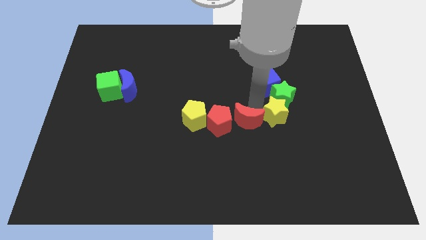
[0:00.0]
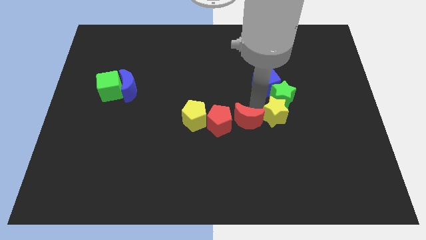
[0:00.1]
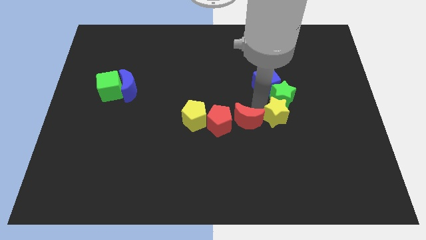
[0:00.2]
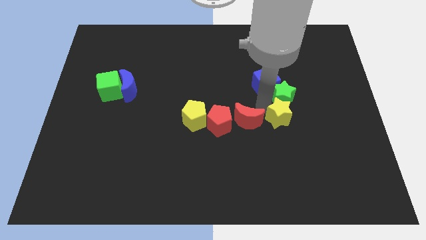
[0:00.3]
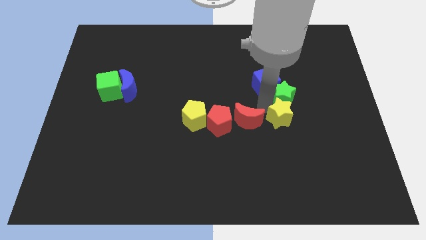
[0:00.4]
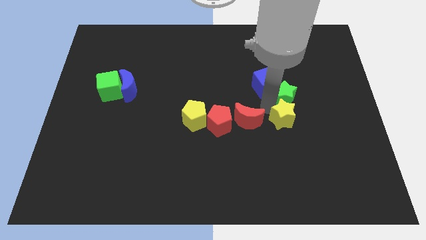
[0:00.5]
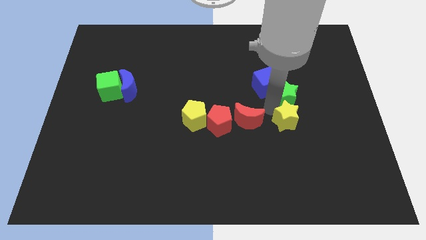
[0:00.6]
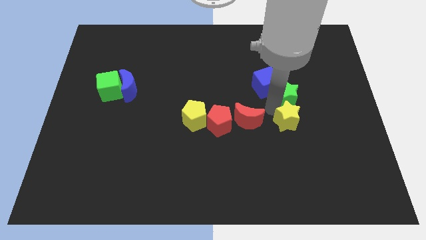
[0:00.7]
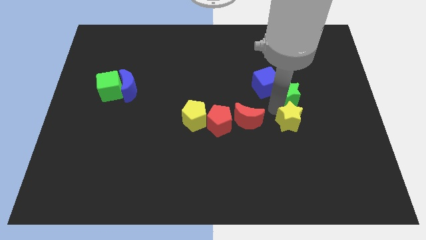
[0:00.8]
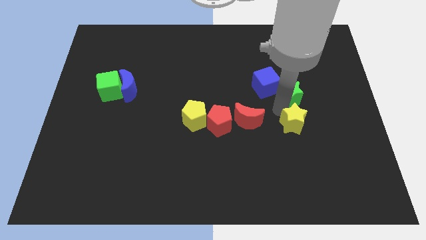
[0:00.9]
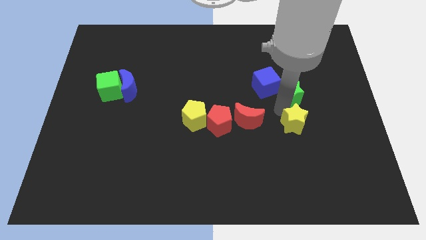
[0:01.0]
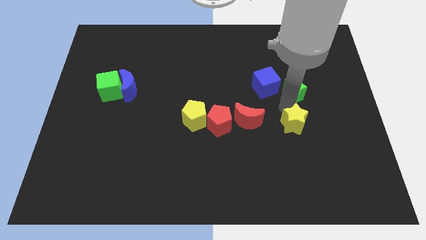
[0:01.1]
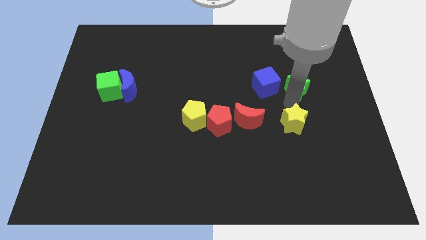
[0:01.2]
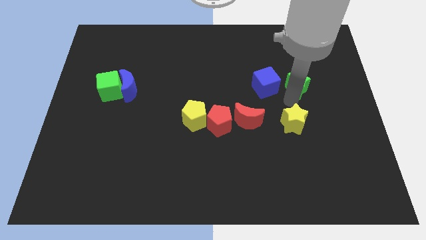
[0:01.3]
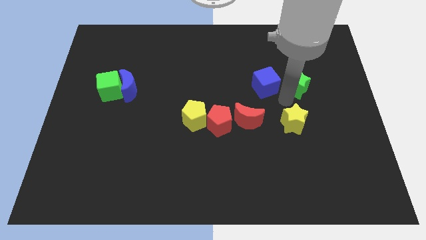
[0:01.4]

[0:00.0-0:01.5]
separate the green and yellow stars

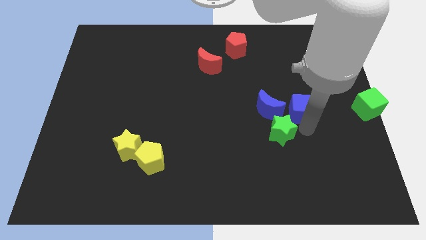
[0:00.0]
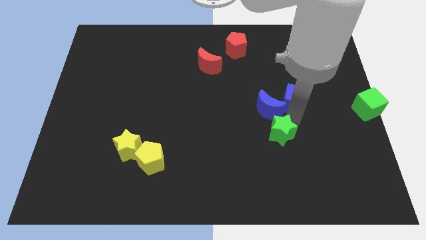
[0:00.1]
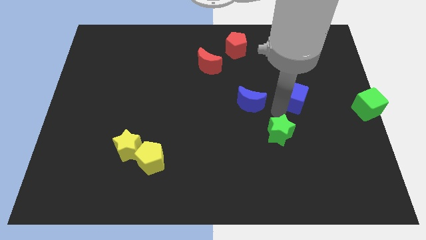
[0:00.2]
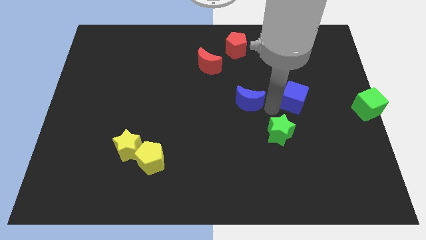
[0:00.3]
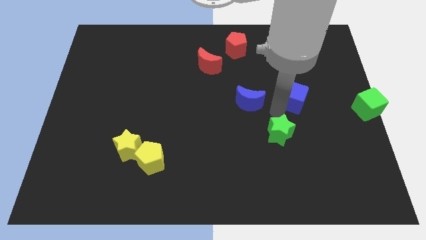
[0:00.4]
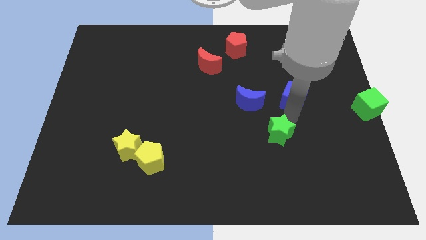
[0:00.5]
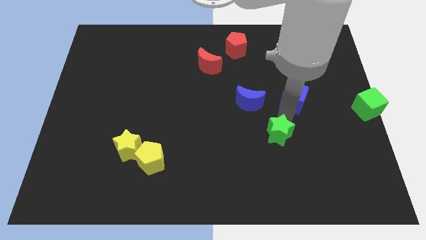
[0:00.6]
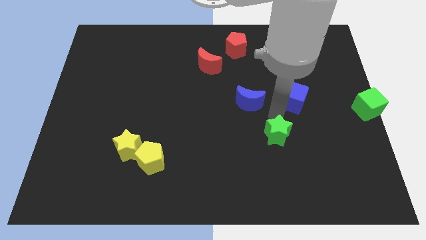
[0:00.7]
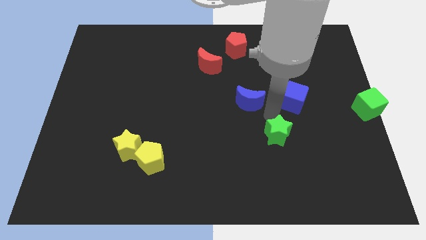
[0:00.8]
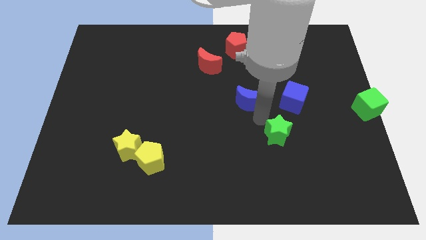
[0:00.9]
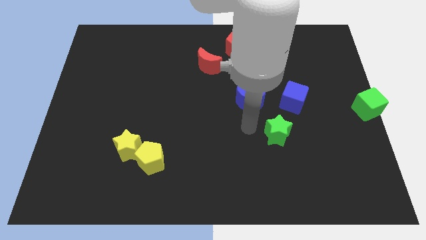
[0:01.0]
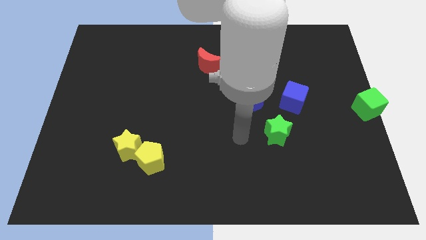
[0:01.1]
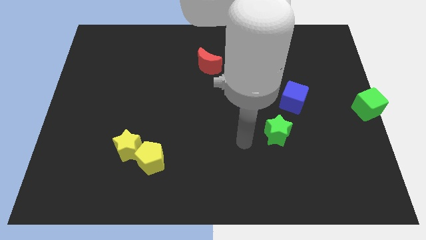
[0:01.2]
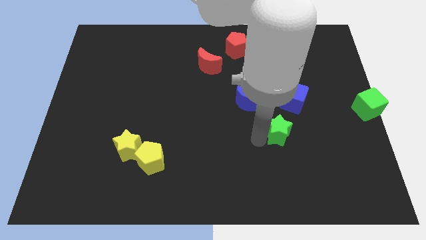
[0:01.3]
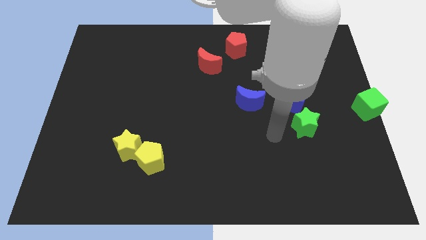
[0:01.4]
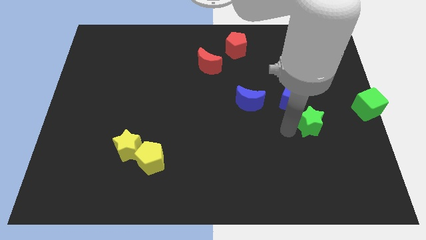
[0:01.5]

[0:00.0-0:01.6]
separate green star from the blue moon

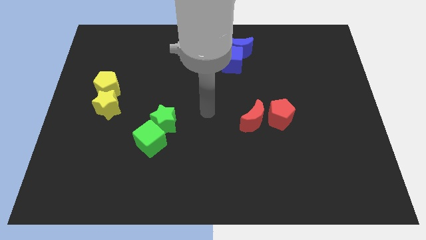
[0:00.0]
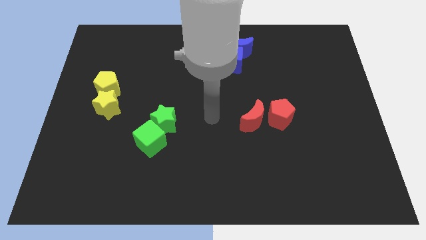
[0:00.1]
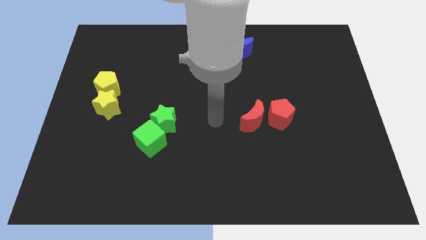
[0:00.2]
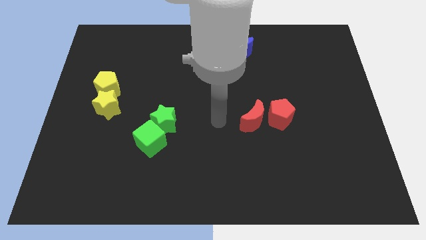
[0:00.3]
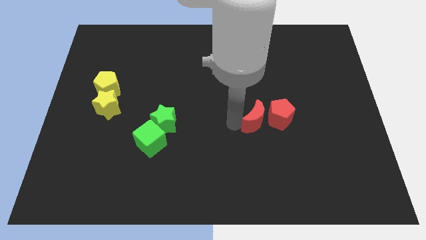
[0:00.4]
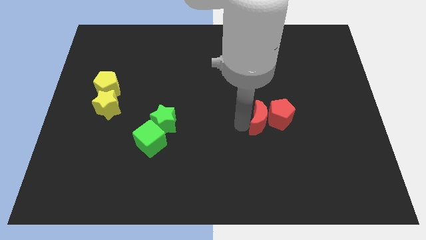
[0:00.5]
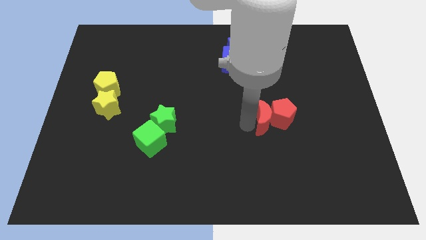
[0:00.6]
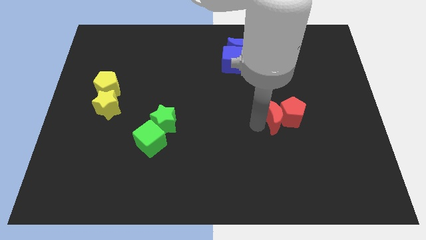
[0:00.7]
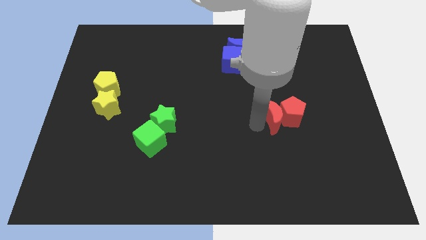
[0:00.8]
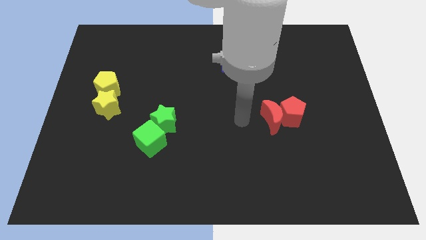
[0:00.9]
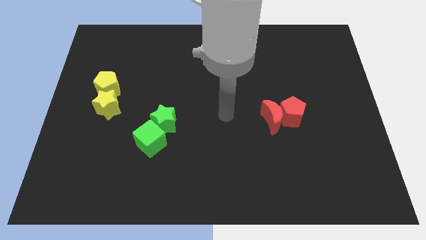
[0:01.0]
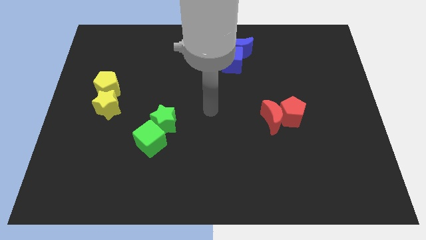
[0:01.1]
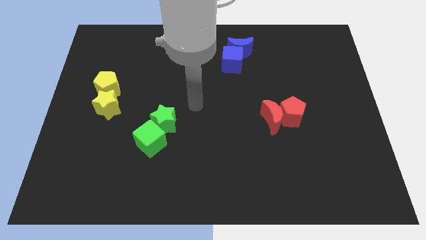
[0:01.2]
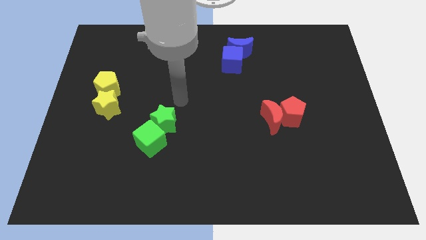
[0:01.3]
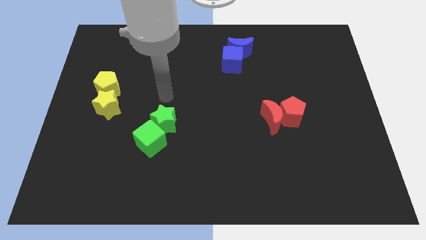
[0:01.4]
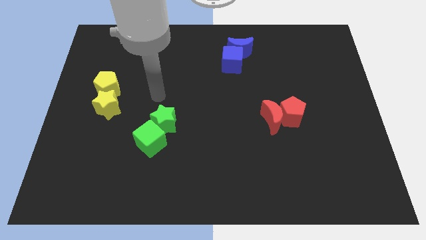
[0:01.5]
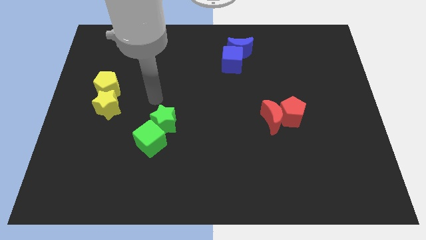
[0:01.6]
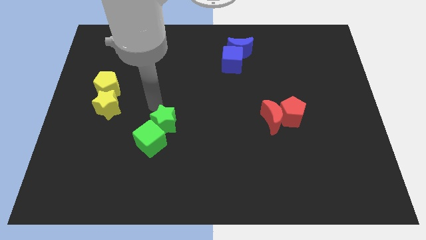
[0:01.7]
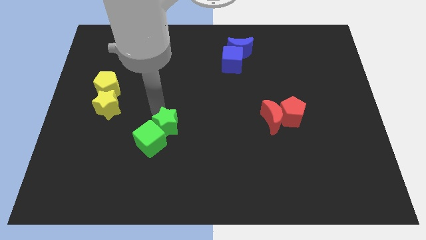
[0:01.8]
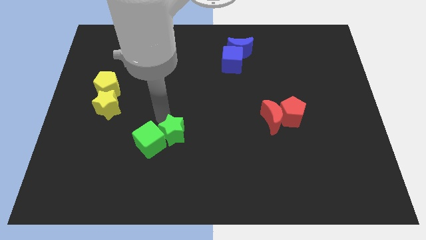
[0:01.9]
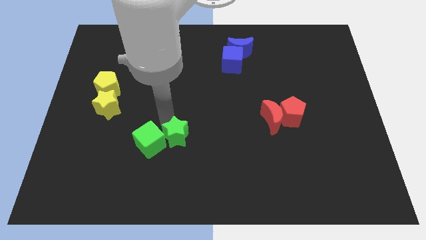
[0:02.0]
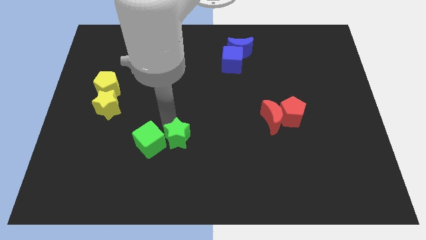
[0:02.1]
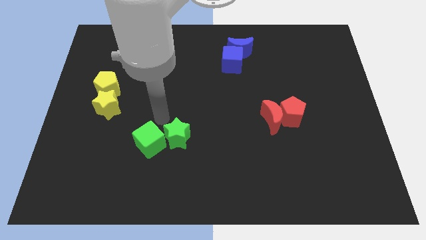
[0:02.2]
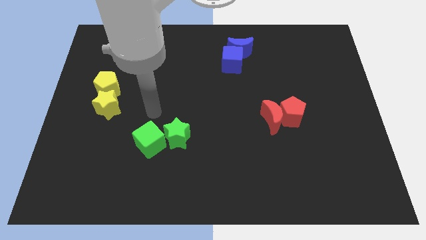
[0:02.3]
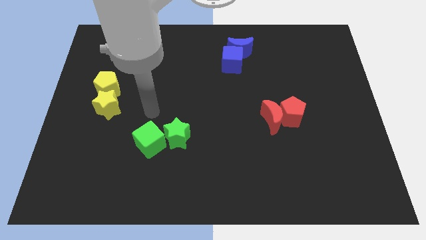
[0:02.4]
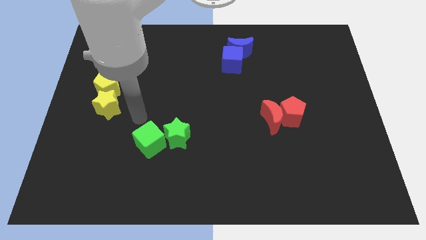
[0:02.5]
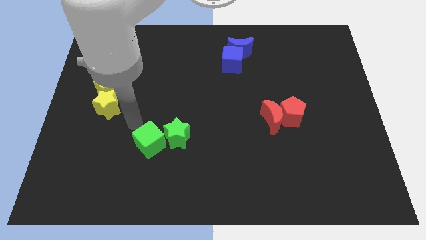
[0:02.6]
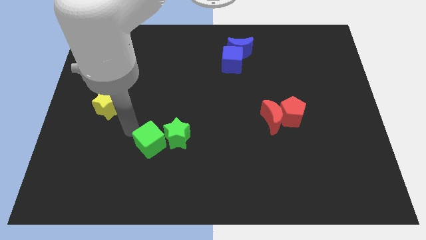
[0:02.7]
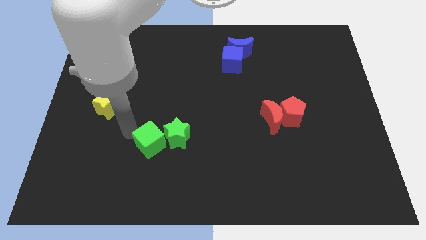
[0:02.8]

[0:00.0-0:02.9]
push the red moon into the red pentagon

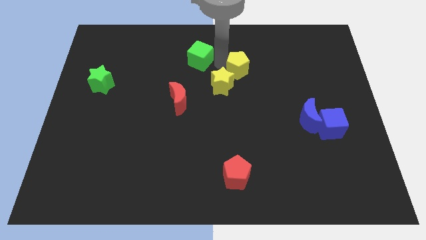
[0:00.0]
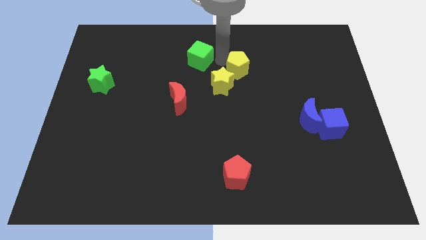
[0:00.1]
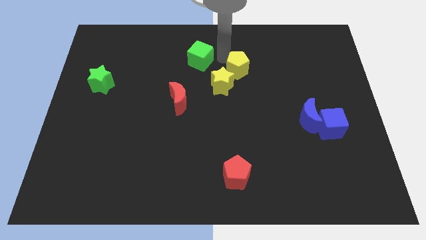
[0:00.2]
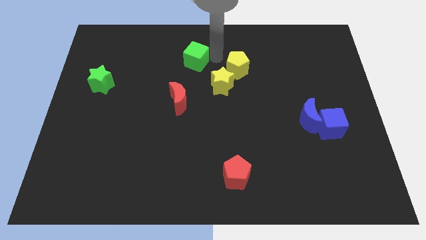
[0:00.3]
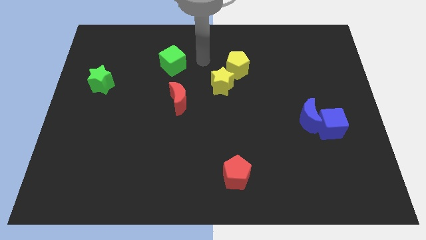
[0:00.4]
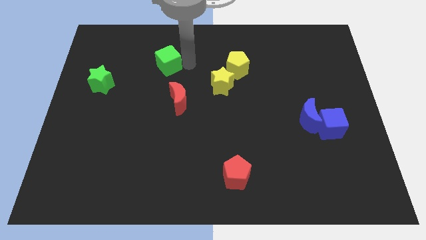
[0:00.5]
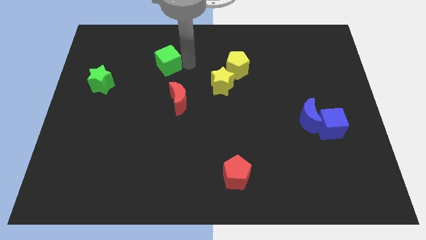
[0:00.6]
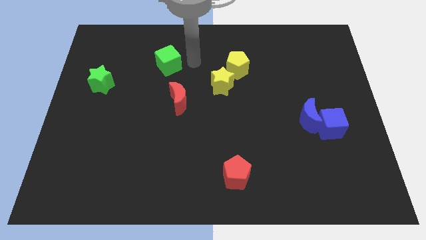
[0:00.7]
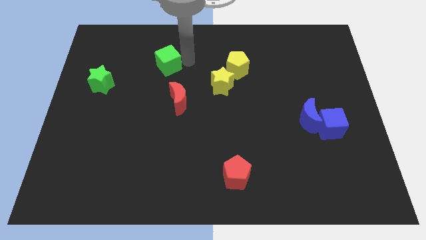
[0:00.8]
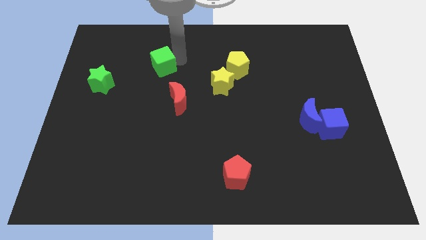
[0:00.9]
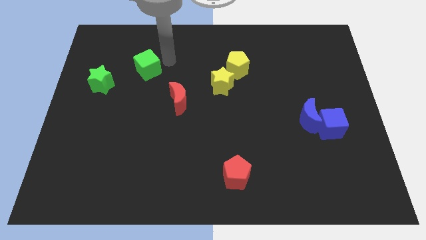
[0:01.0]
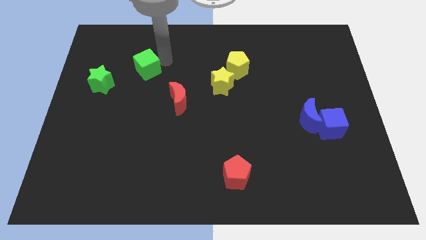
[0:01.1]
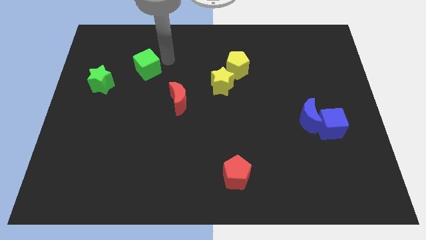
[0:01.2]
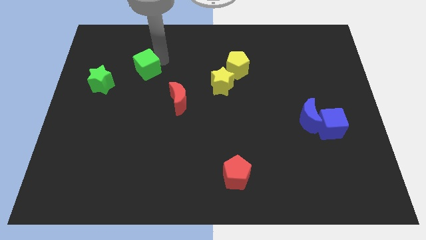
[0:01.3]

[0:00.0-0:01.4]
move the green cube slightly left

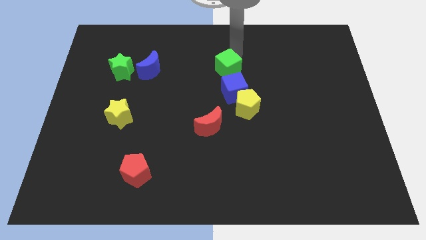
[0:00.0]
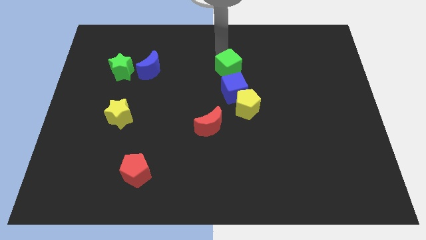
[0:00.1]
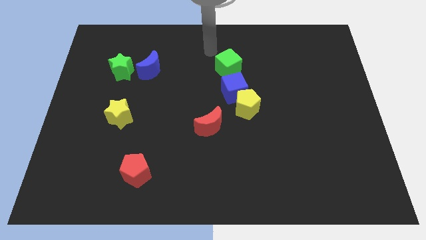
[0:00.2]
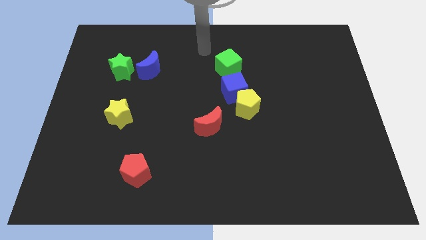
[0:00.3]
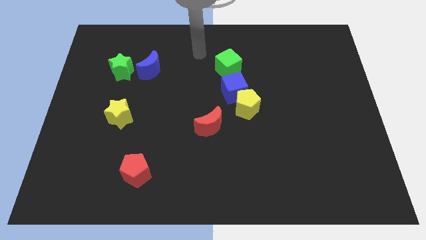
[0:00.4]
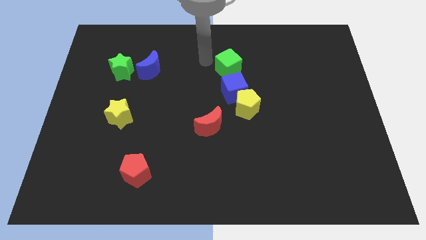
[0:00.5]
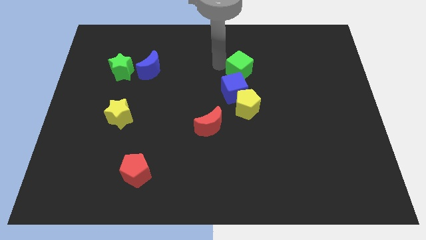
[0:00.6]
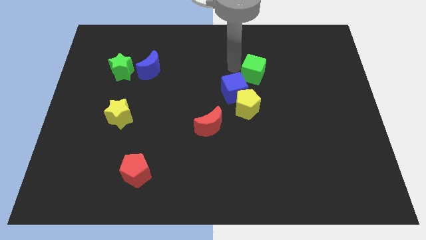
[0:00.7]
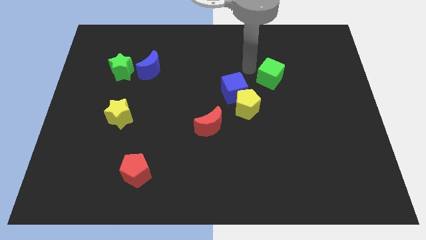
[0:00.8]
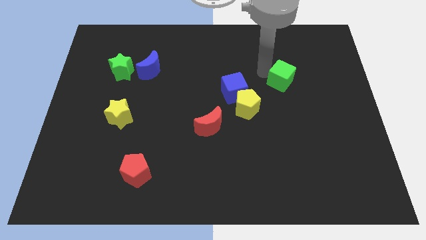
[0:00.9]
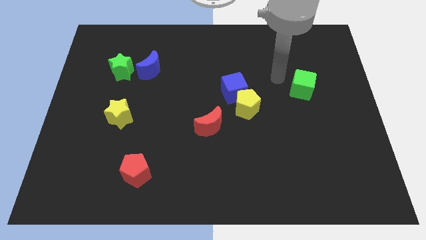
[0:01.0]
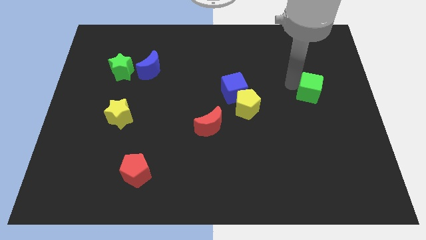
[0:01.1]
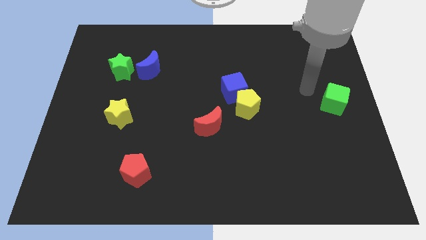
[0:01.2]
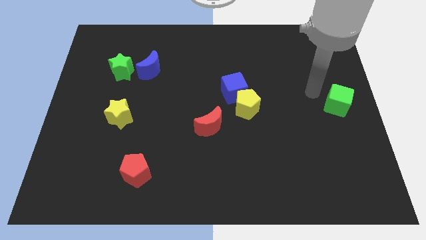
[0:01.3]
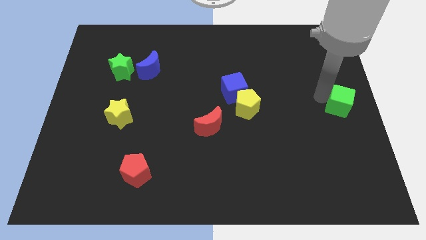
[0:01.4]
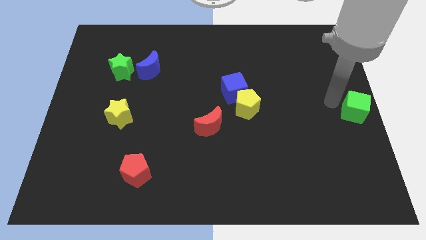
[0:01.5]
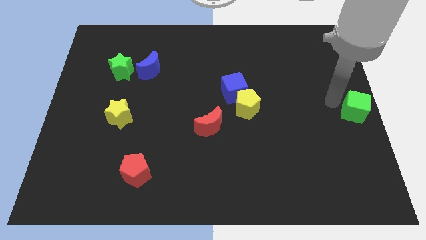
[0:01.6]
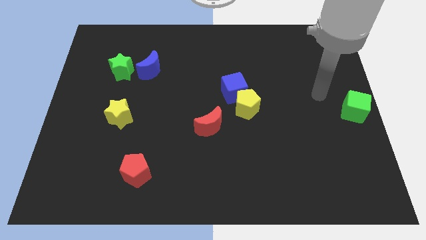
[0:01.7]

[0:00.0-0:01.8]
move the green cube to the right side of the board
